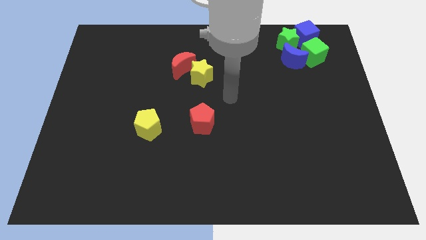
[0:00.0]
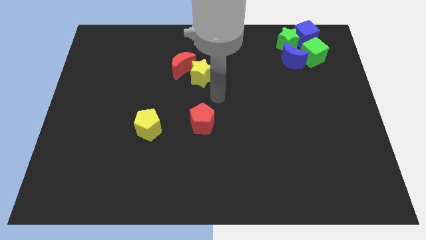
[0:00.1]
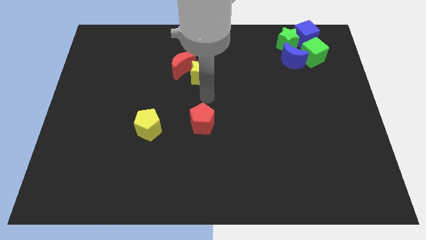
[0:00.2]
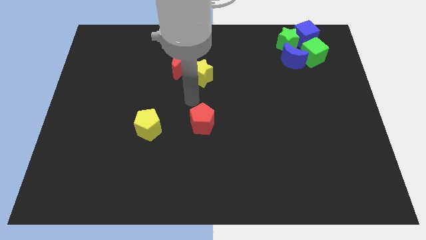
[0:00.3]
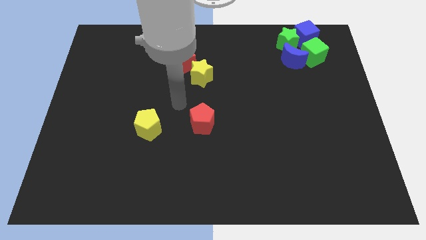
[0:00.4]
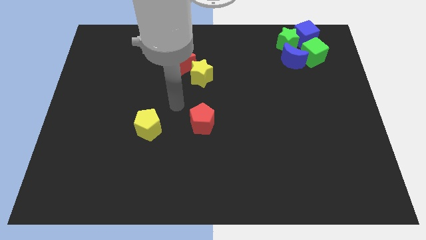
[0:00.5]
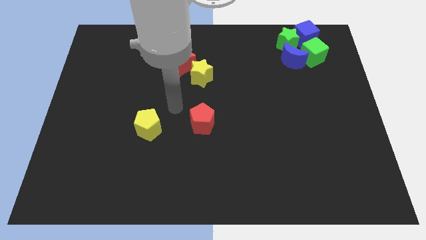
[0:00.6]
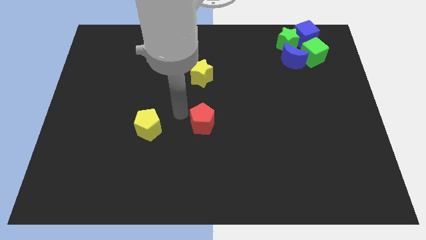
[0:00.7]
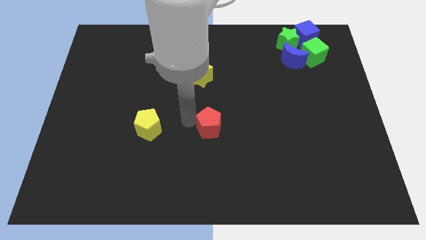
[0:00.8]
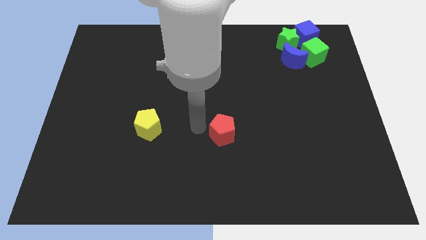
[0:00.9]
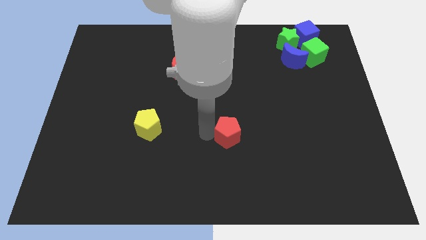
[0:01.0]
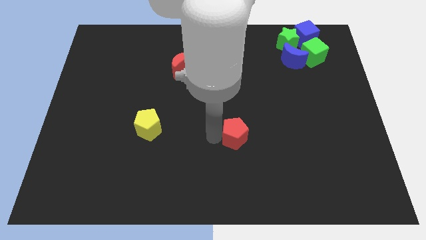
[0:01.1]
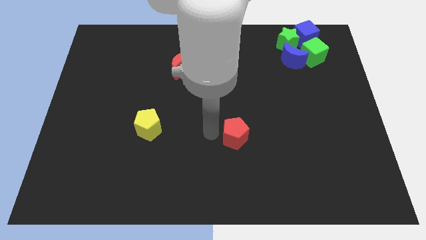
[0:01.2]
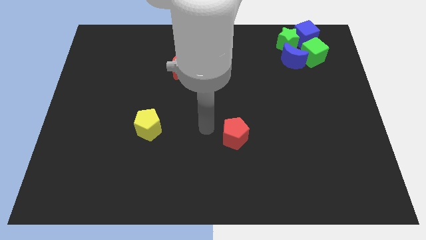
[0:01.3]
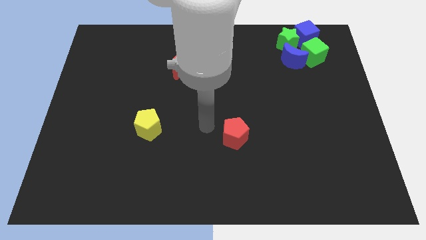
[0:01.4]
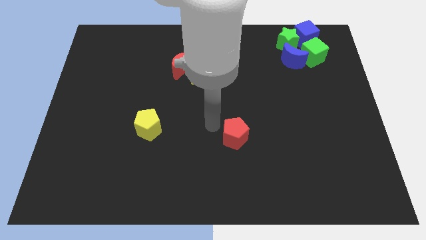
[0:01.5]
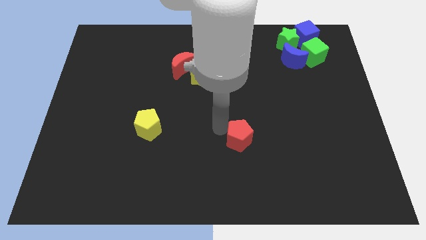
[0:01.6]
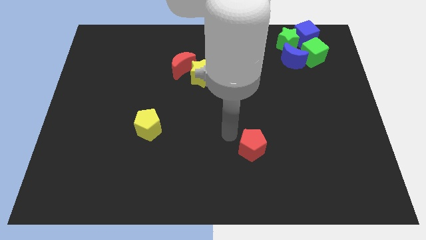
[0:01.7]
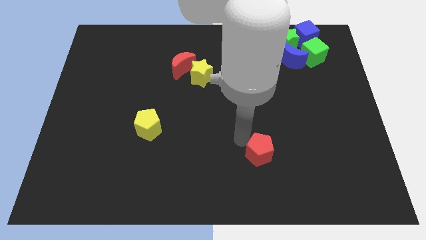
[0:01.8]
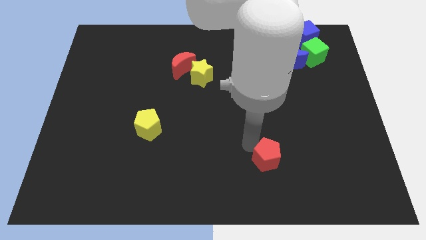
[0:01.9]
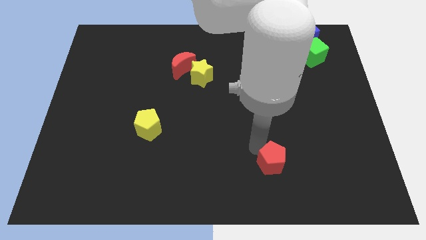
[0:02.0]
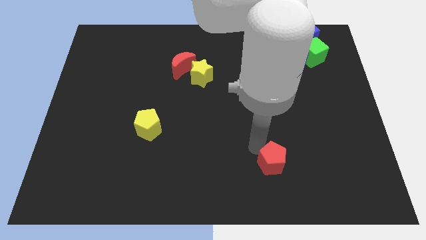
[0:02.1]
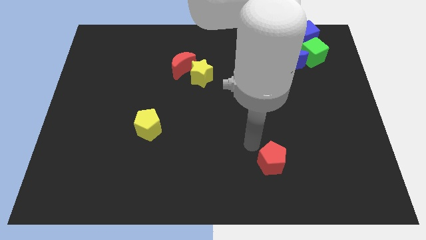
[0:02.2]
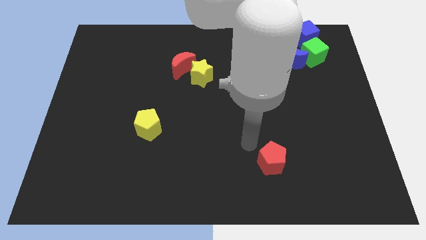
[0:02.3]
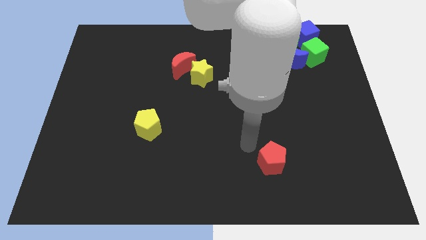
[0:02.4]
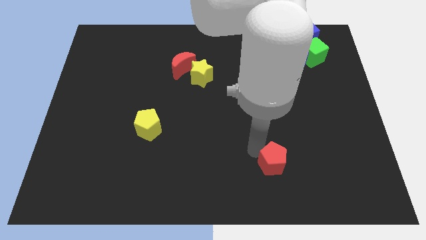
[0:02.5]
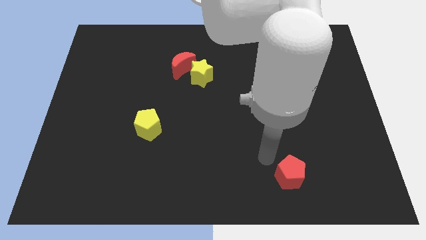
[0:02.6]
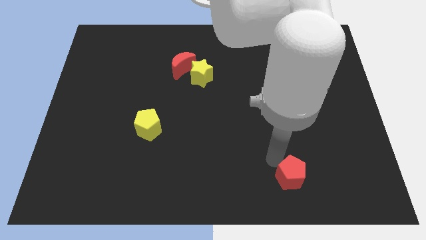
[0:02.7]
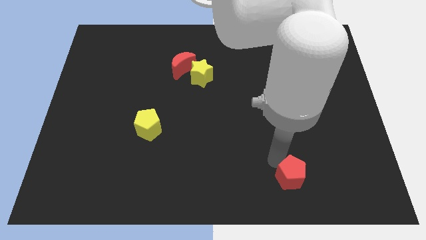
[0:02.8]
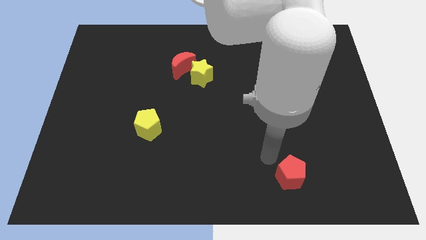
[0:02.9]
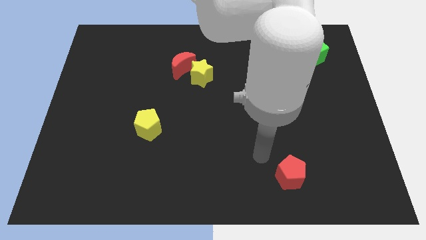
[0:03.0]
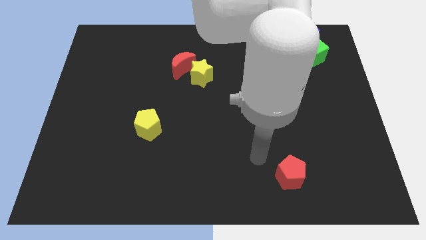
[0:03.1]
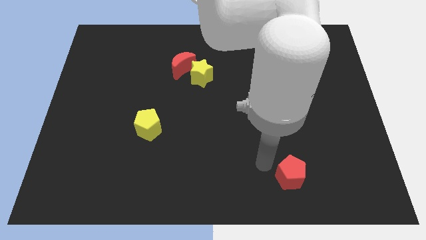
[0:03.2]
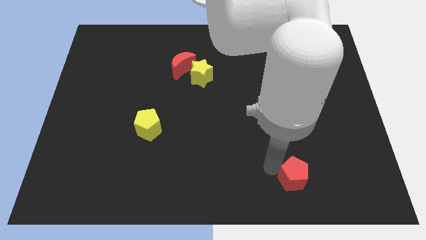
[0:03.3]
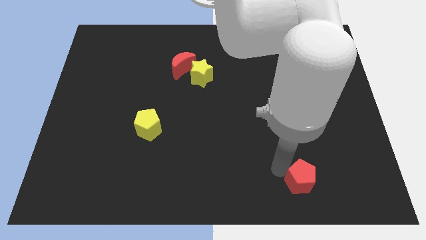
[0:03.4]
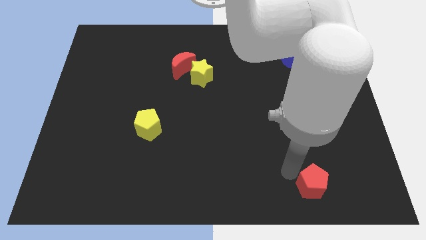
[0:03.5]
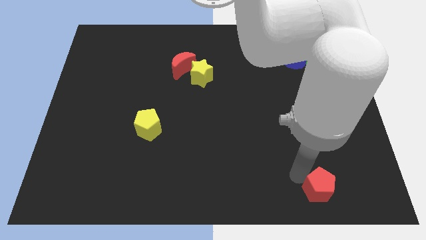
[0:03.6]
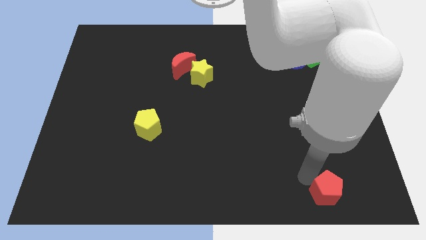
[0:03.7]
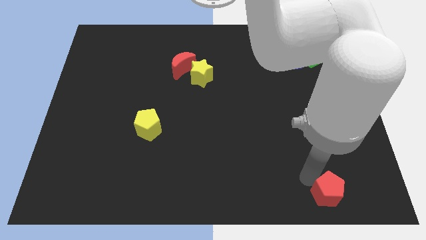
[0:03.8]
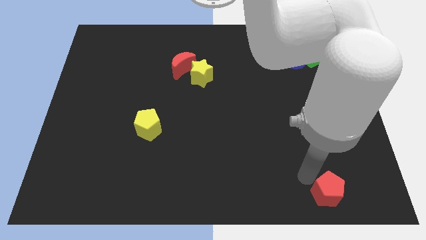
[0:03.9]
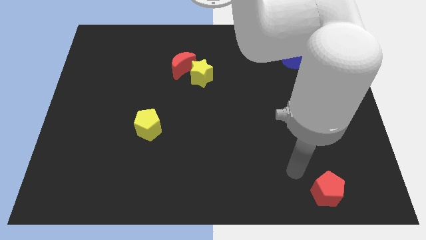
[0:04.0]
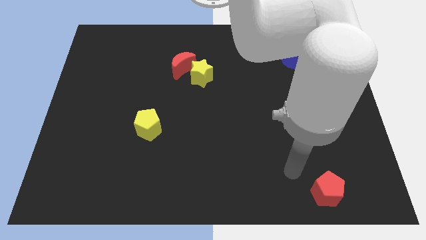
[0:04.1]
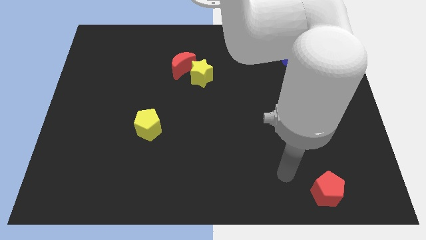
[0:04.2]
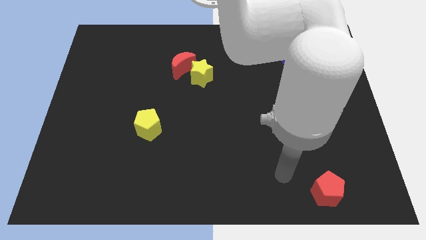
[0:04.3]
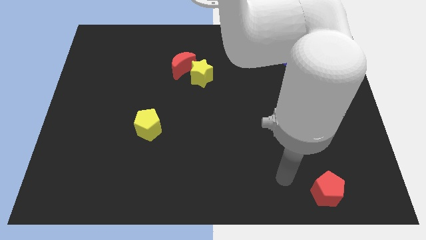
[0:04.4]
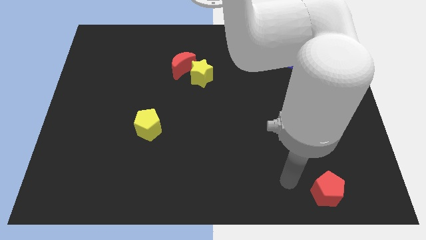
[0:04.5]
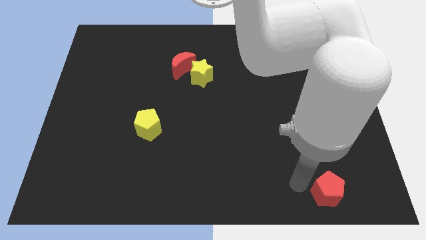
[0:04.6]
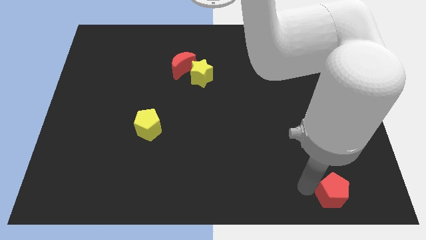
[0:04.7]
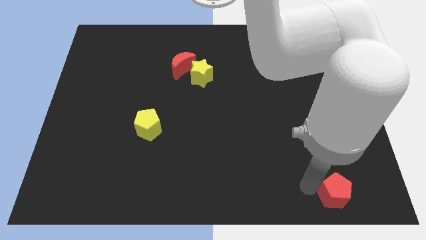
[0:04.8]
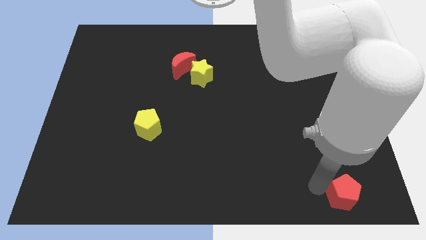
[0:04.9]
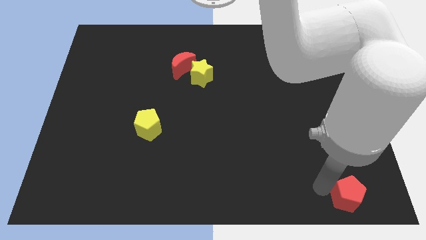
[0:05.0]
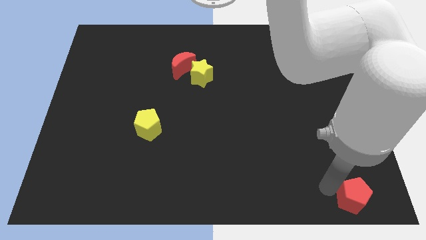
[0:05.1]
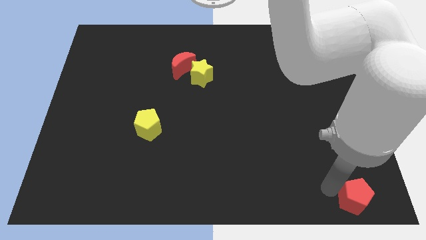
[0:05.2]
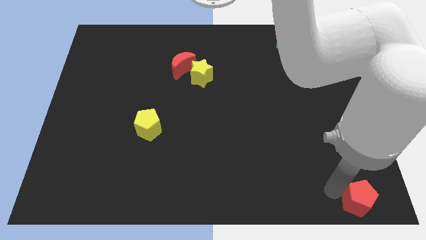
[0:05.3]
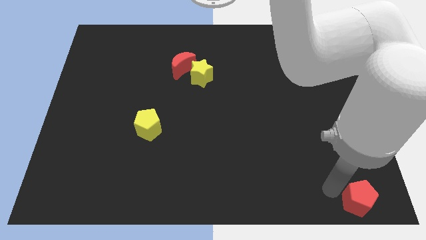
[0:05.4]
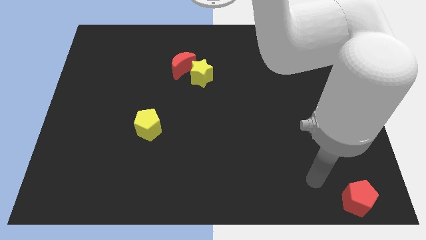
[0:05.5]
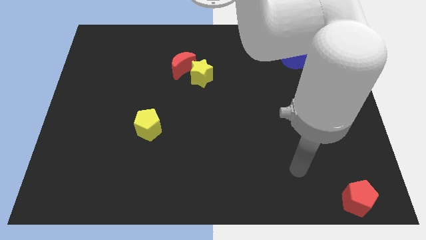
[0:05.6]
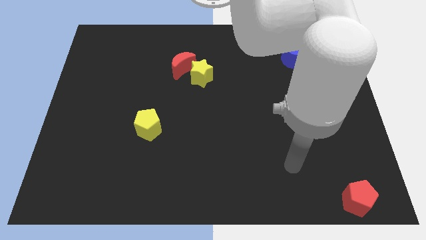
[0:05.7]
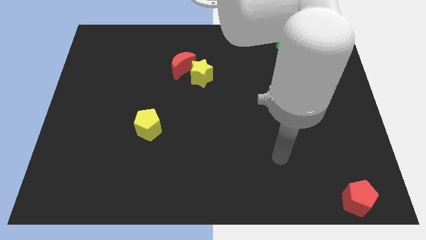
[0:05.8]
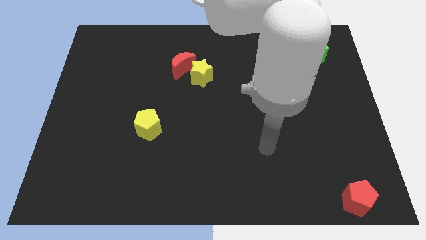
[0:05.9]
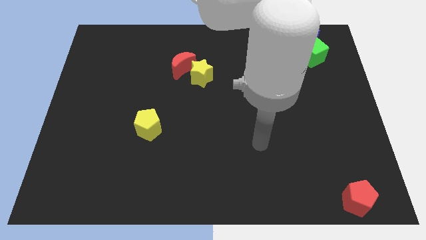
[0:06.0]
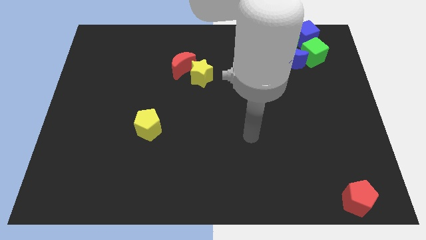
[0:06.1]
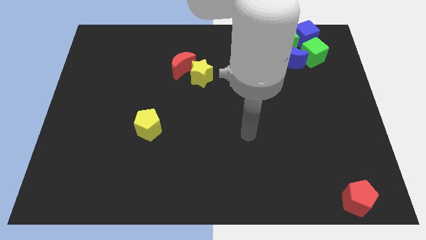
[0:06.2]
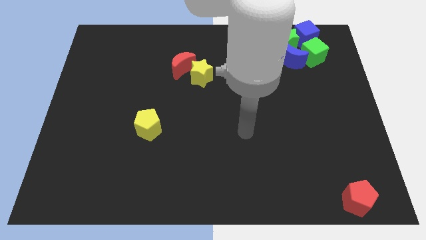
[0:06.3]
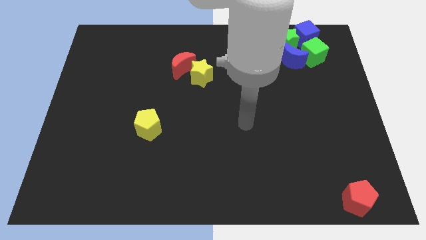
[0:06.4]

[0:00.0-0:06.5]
place the red pentagon vertically below the green cube

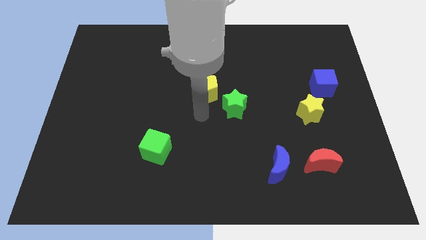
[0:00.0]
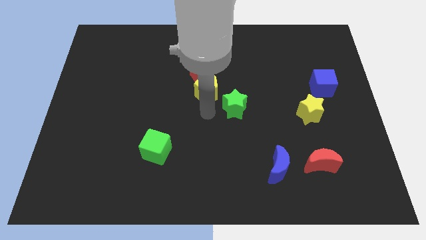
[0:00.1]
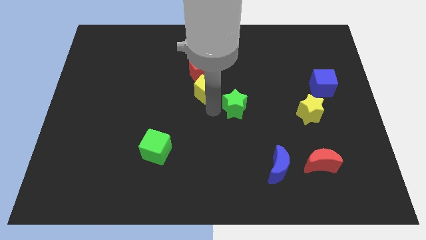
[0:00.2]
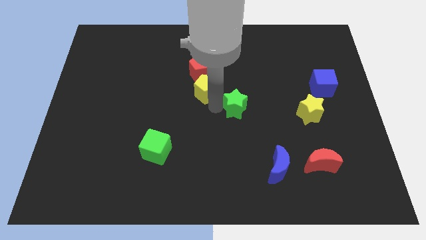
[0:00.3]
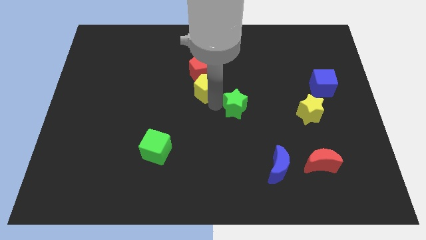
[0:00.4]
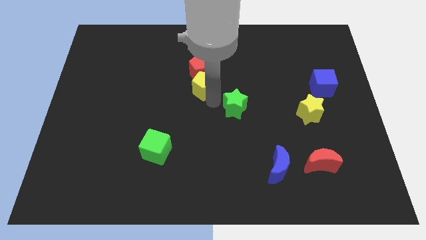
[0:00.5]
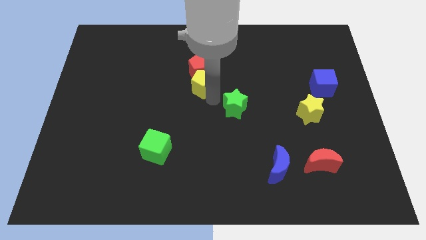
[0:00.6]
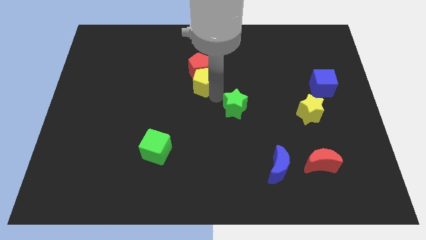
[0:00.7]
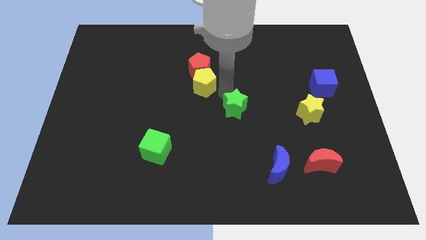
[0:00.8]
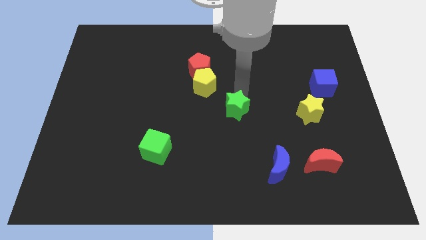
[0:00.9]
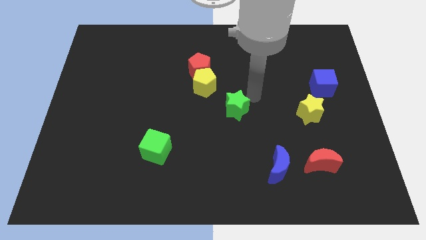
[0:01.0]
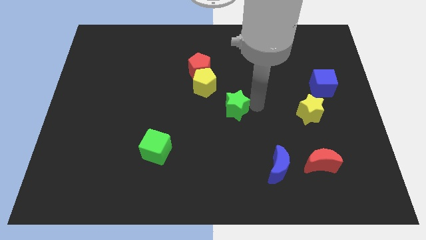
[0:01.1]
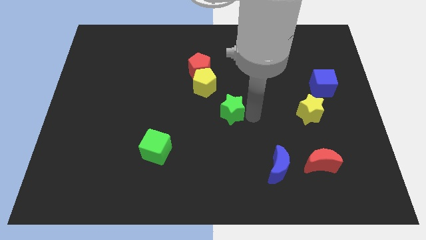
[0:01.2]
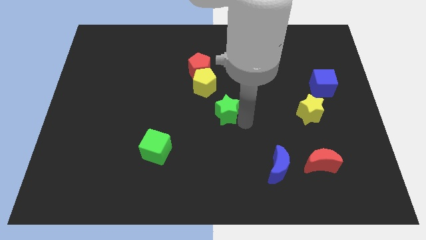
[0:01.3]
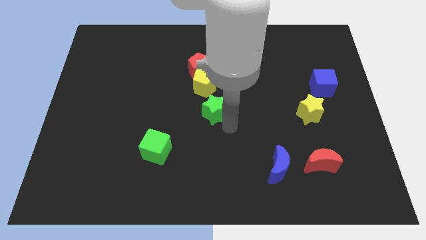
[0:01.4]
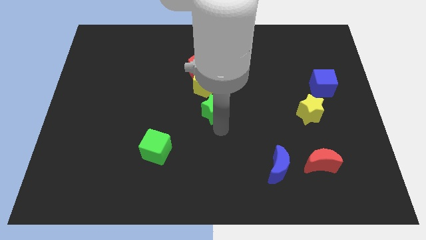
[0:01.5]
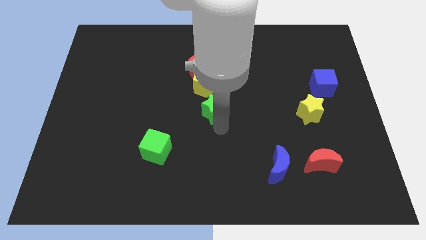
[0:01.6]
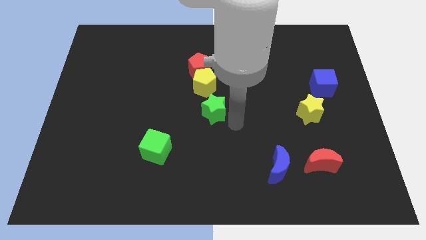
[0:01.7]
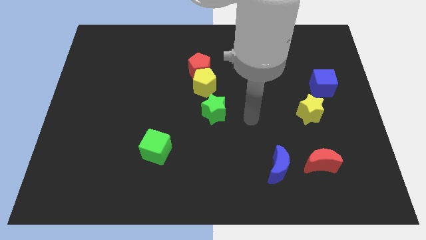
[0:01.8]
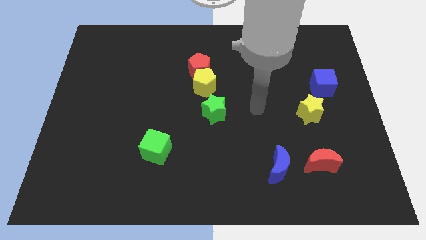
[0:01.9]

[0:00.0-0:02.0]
place the green star down to the yellow pentagon

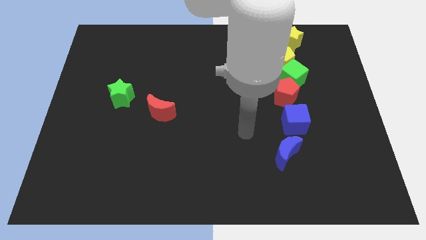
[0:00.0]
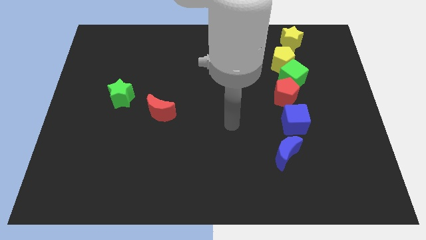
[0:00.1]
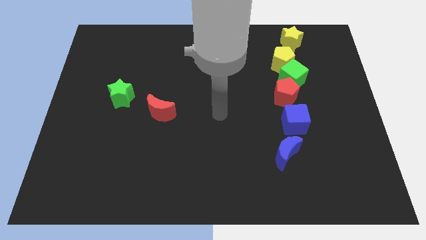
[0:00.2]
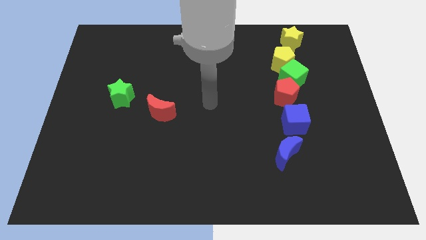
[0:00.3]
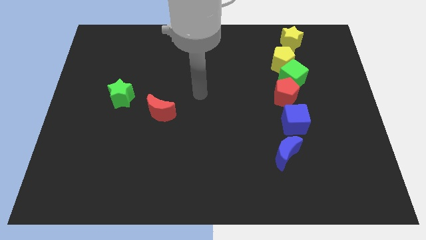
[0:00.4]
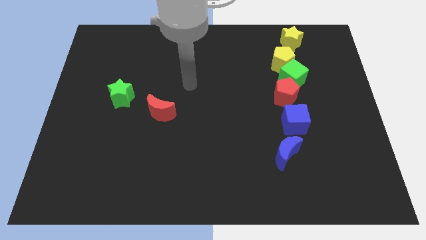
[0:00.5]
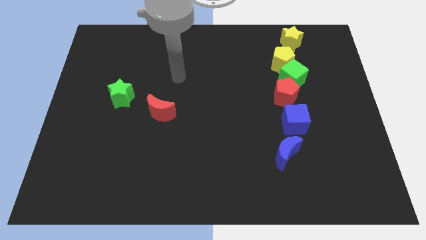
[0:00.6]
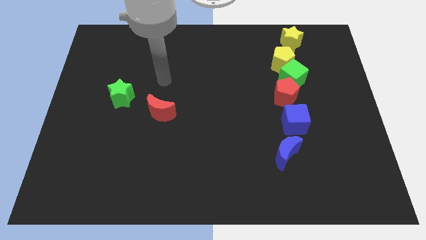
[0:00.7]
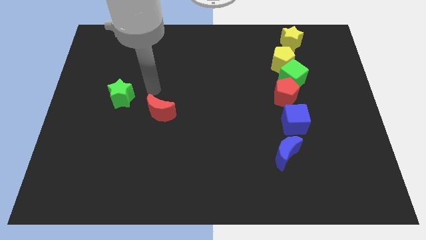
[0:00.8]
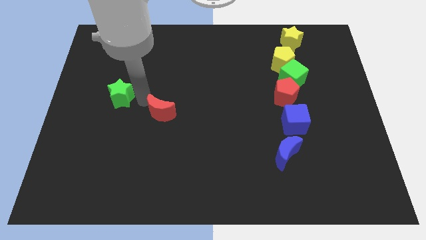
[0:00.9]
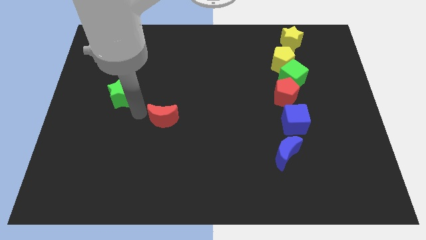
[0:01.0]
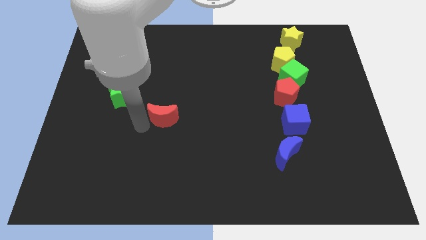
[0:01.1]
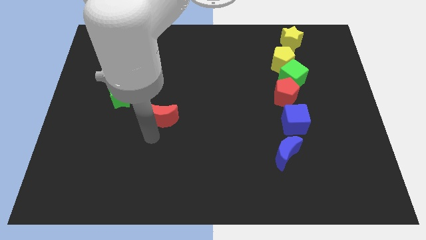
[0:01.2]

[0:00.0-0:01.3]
tap red moon slightly
